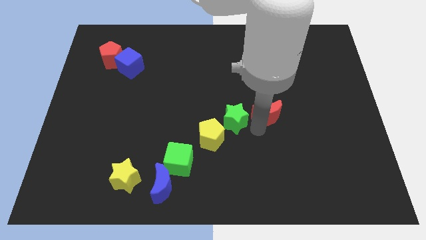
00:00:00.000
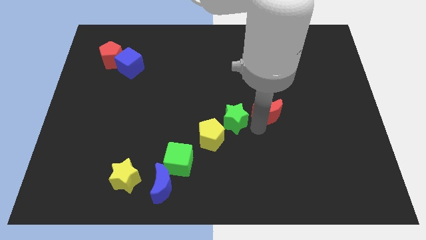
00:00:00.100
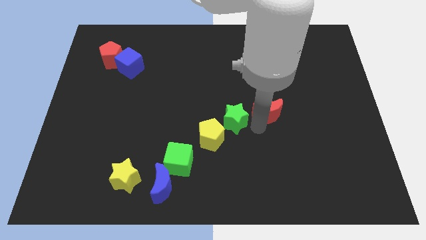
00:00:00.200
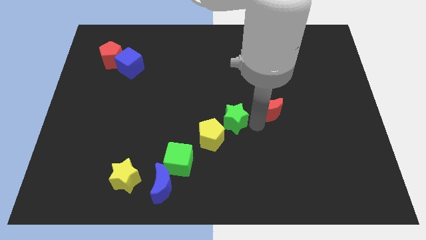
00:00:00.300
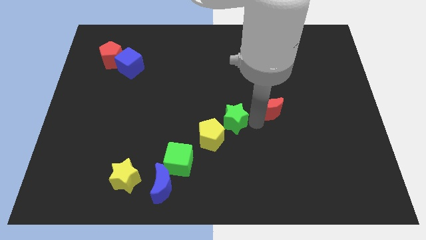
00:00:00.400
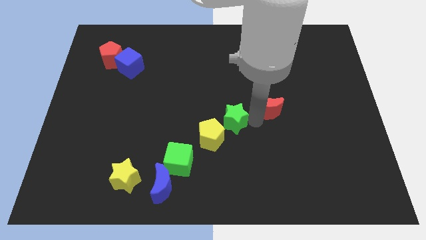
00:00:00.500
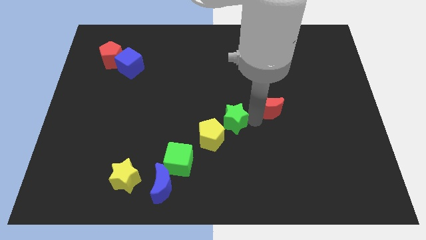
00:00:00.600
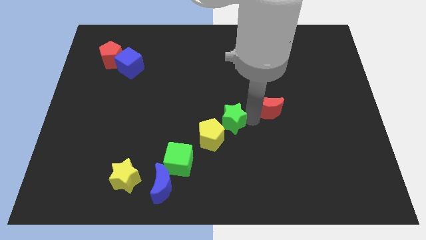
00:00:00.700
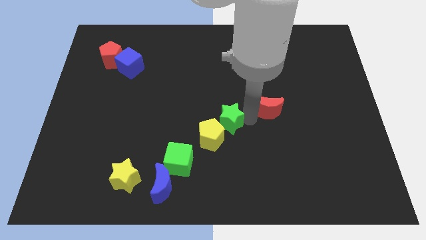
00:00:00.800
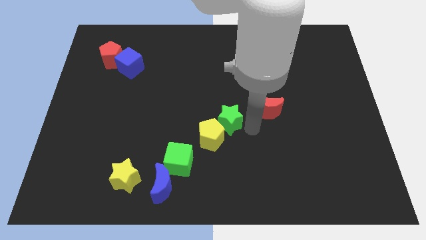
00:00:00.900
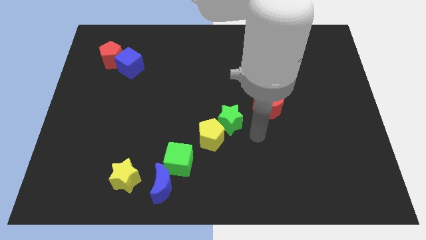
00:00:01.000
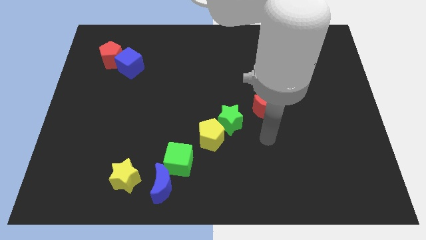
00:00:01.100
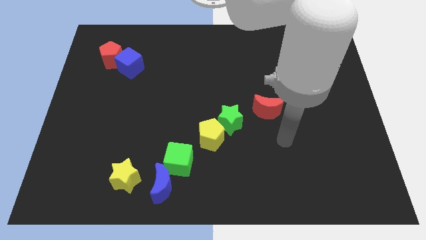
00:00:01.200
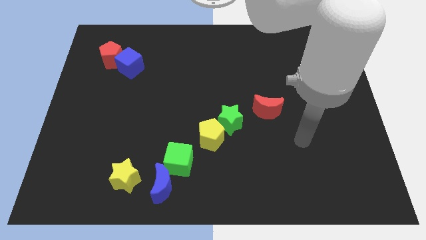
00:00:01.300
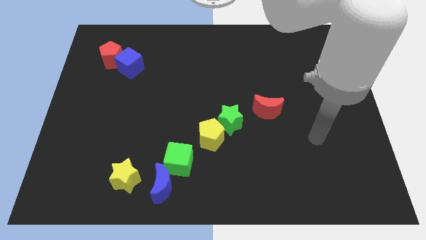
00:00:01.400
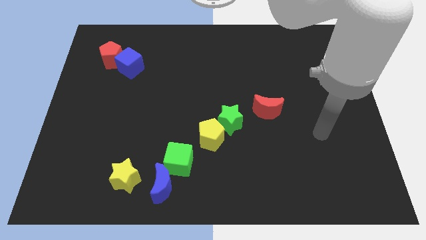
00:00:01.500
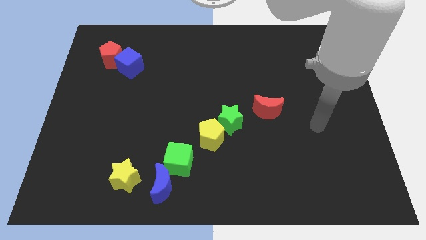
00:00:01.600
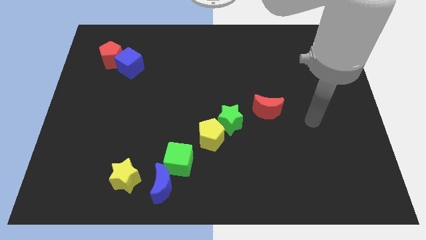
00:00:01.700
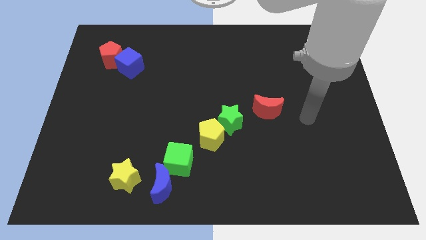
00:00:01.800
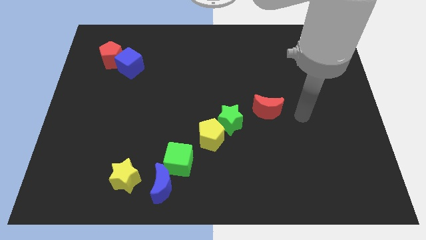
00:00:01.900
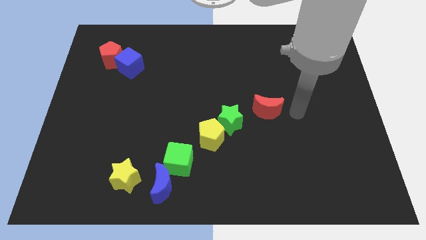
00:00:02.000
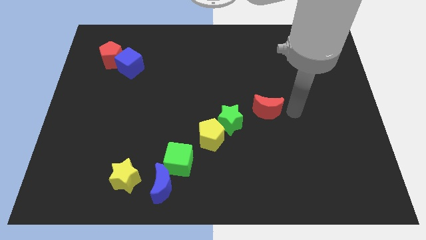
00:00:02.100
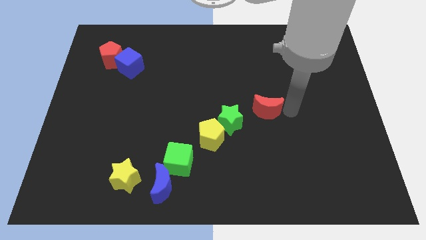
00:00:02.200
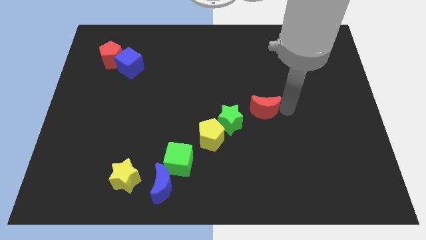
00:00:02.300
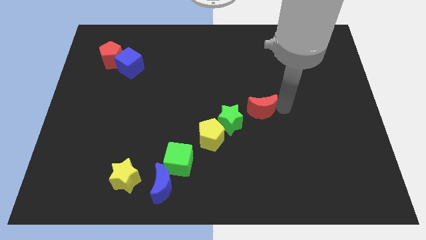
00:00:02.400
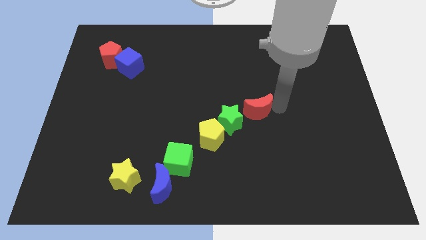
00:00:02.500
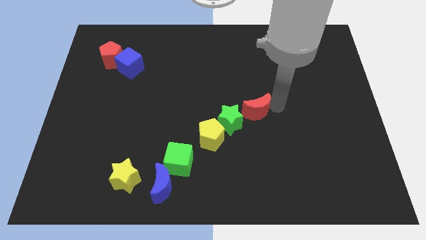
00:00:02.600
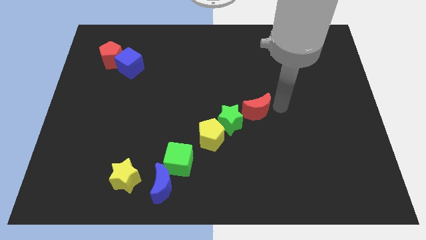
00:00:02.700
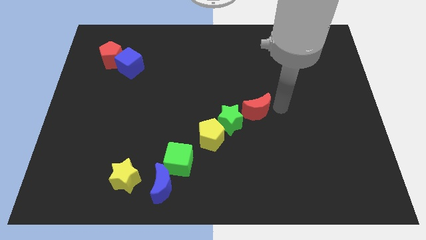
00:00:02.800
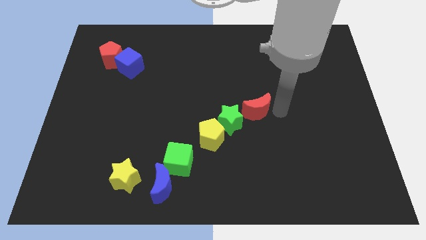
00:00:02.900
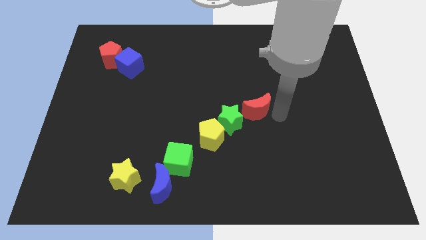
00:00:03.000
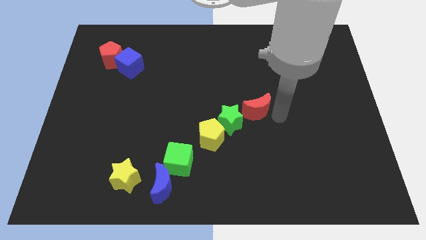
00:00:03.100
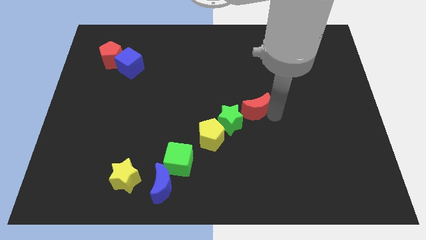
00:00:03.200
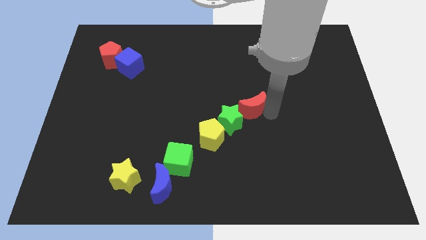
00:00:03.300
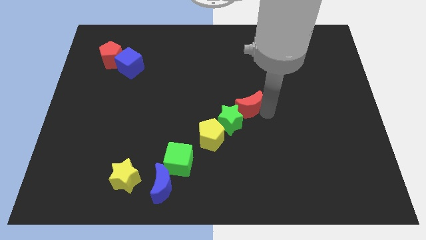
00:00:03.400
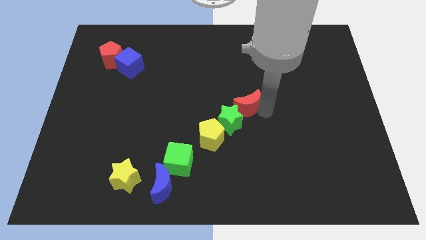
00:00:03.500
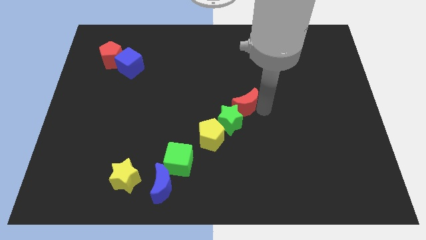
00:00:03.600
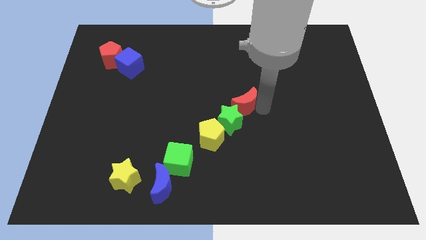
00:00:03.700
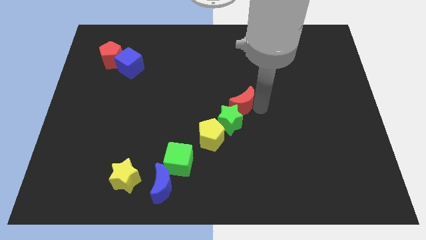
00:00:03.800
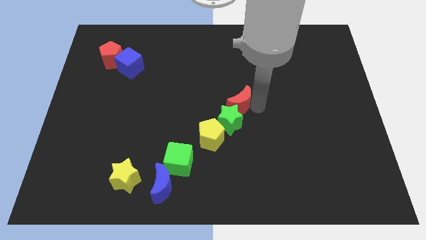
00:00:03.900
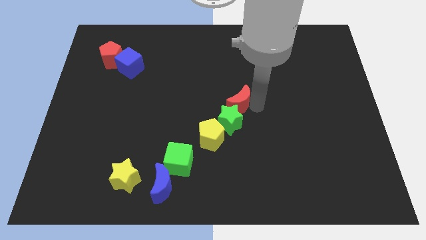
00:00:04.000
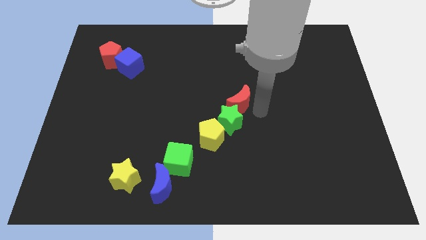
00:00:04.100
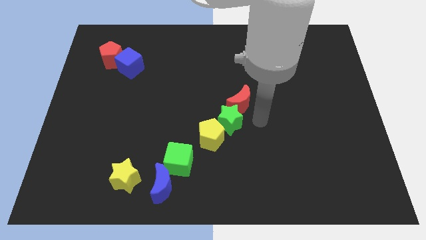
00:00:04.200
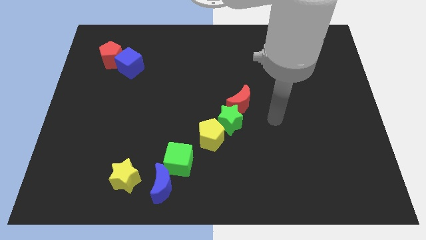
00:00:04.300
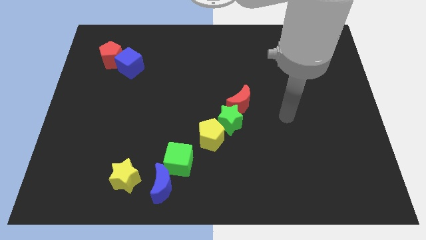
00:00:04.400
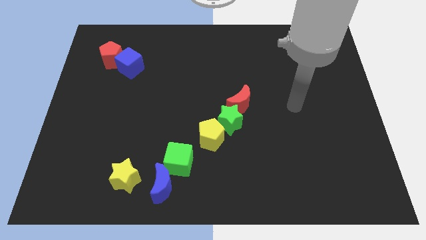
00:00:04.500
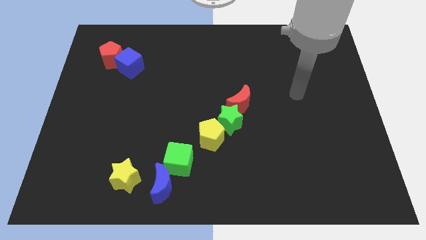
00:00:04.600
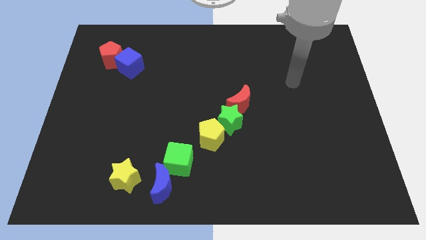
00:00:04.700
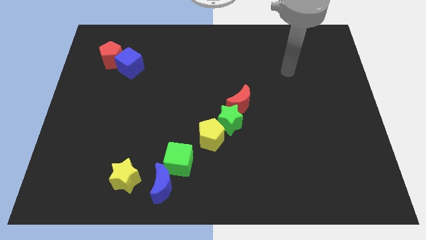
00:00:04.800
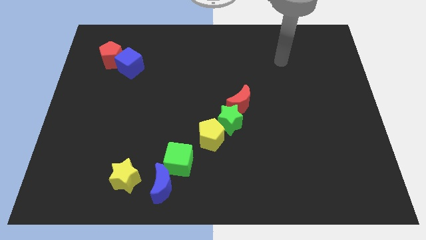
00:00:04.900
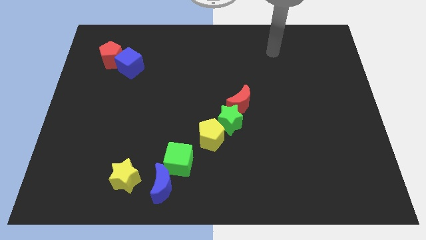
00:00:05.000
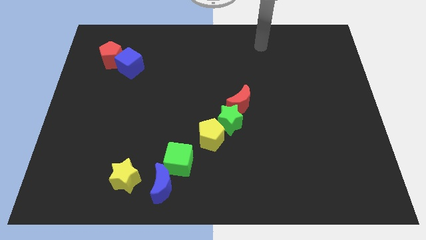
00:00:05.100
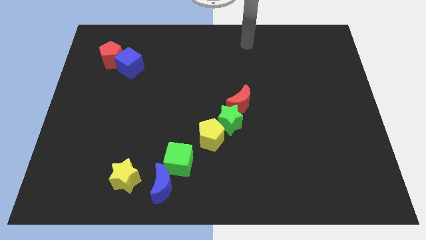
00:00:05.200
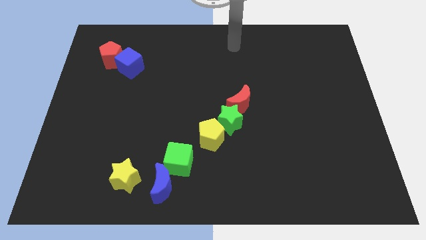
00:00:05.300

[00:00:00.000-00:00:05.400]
place the red crescent above the green star

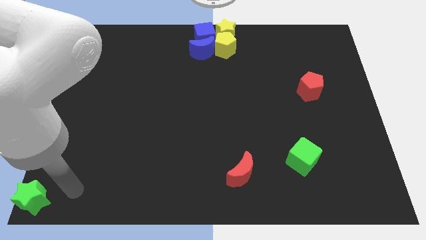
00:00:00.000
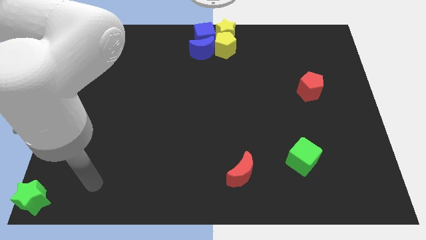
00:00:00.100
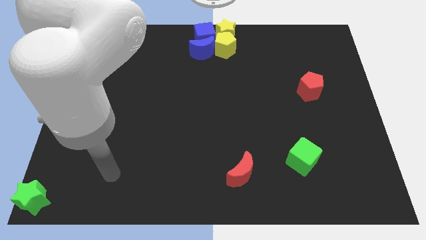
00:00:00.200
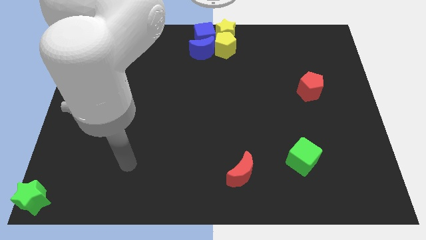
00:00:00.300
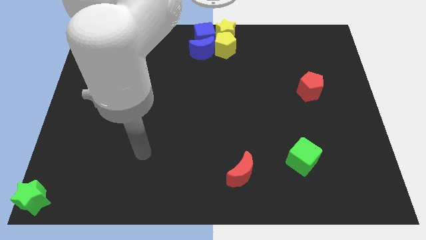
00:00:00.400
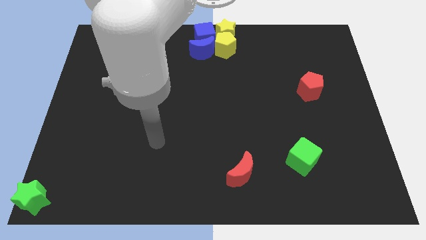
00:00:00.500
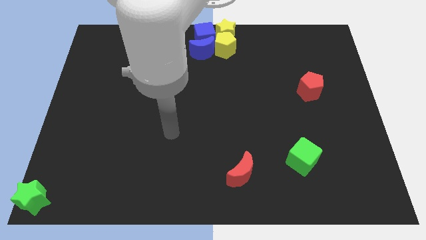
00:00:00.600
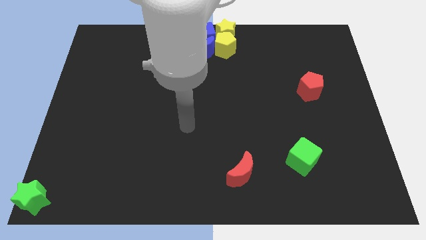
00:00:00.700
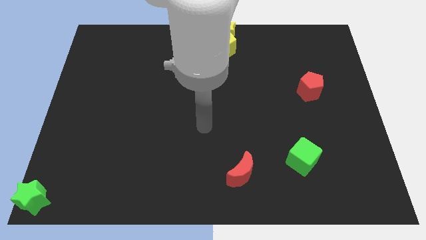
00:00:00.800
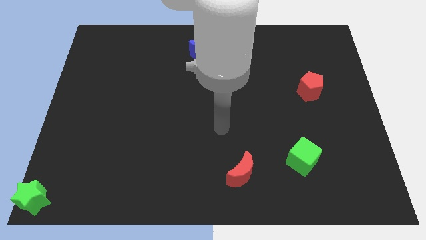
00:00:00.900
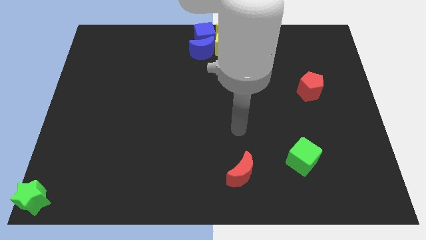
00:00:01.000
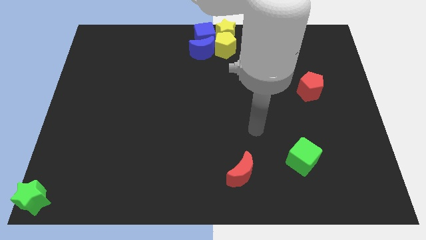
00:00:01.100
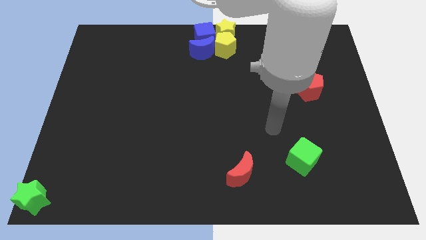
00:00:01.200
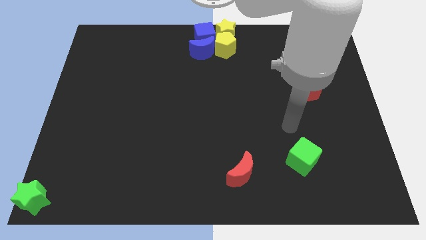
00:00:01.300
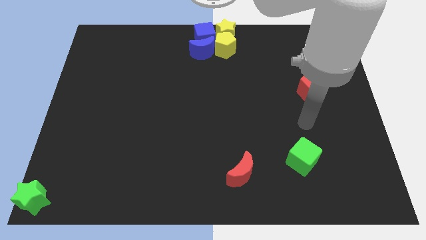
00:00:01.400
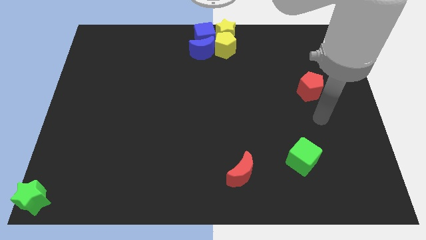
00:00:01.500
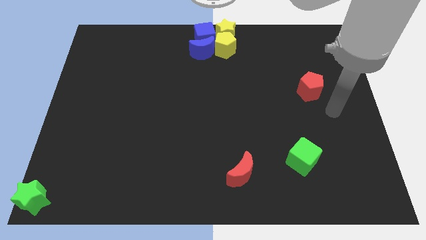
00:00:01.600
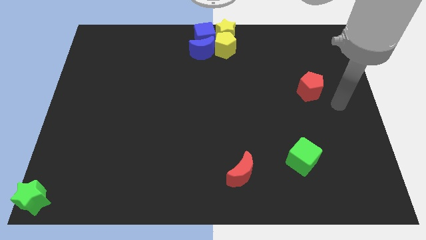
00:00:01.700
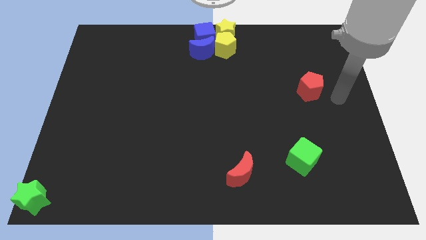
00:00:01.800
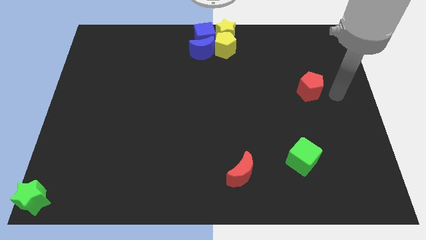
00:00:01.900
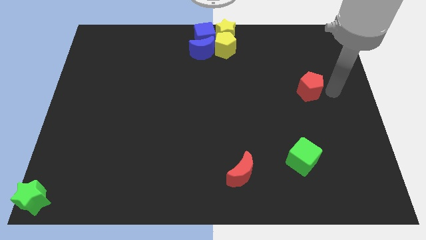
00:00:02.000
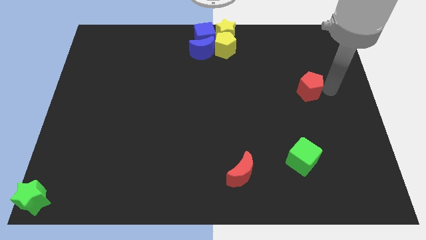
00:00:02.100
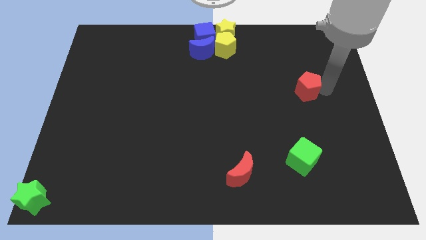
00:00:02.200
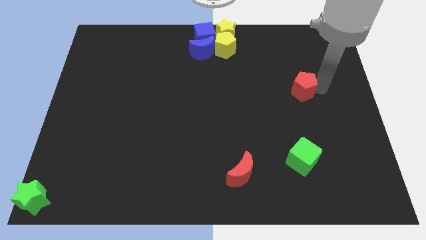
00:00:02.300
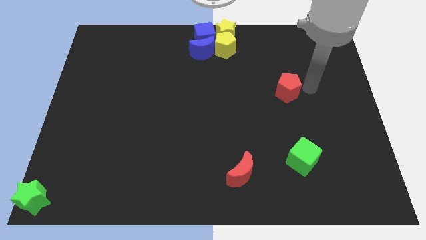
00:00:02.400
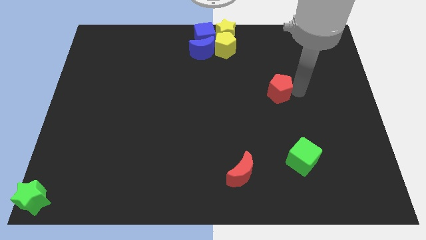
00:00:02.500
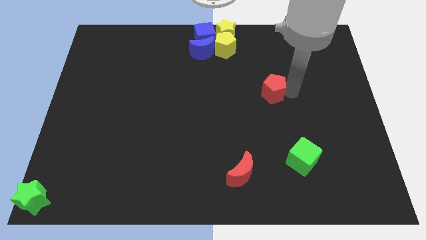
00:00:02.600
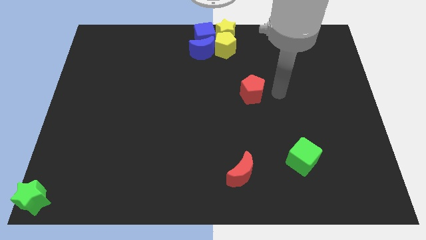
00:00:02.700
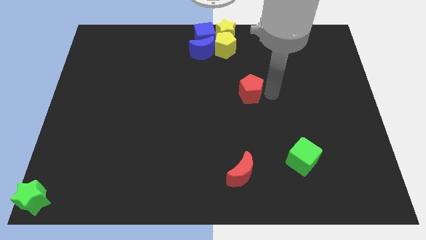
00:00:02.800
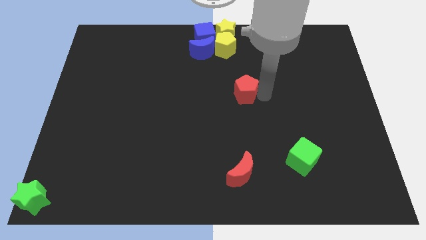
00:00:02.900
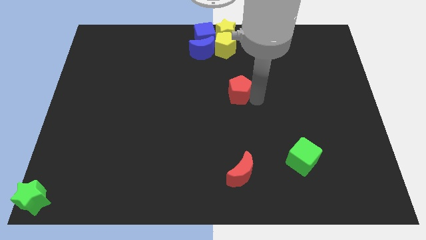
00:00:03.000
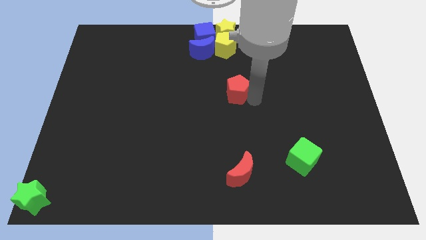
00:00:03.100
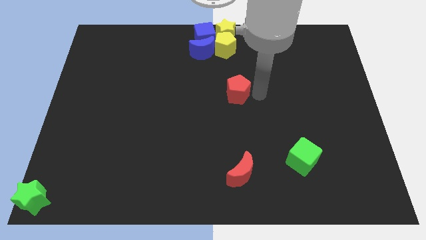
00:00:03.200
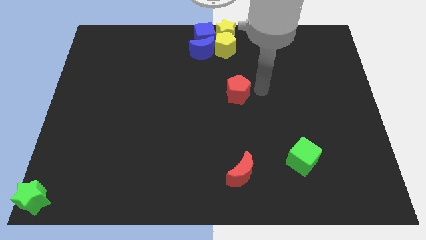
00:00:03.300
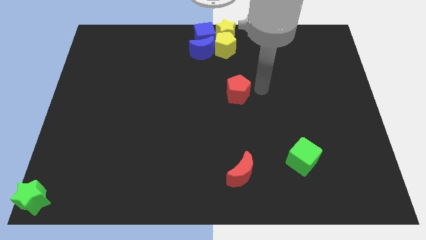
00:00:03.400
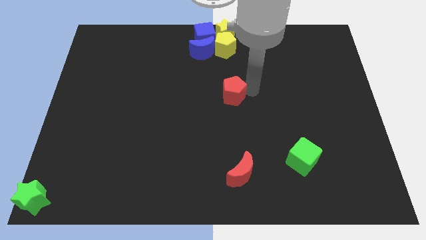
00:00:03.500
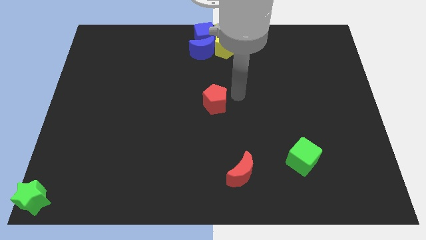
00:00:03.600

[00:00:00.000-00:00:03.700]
move the red pentagon to the center of the board
